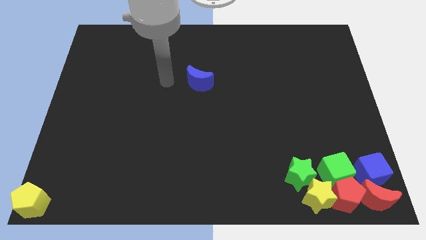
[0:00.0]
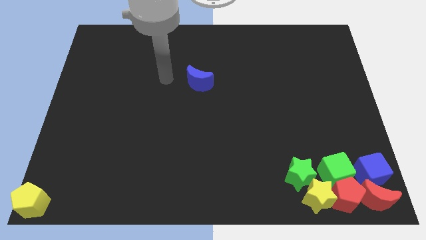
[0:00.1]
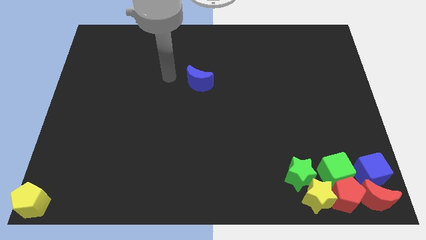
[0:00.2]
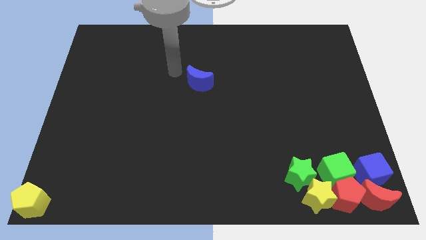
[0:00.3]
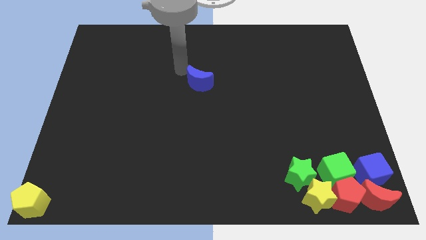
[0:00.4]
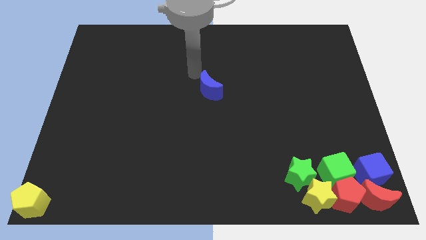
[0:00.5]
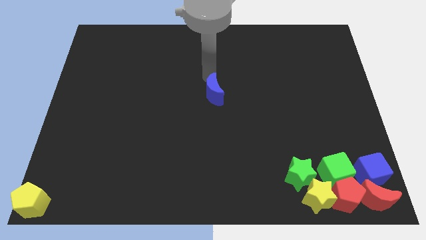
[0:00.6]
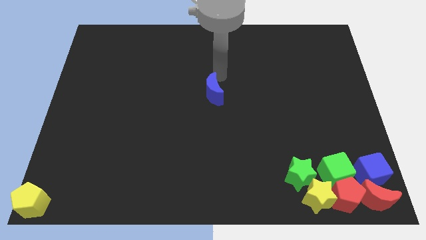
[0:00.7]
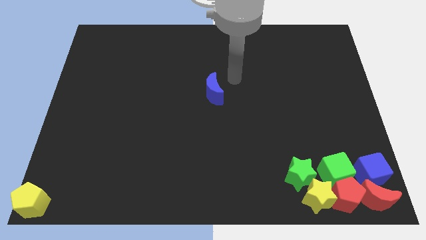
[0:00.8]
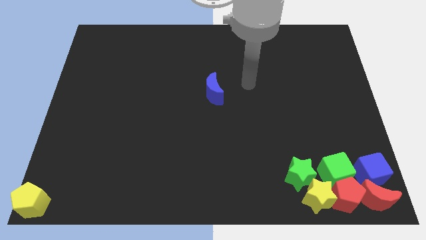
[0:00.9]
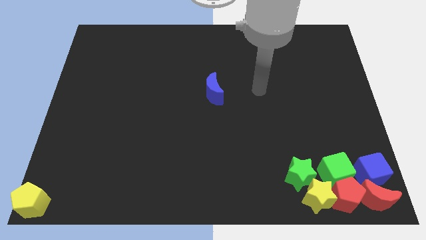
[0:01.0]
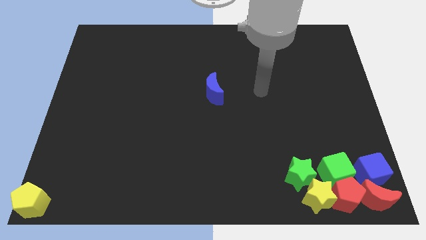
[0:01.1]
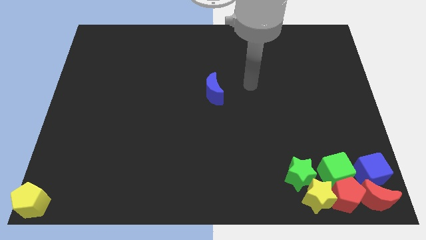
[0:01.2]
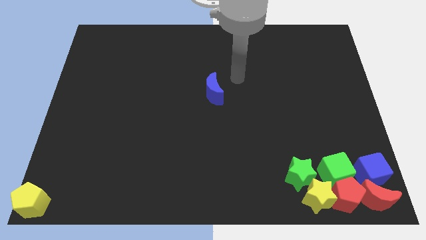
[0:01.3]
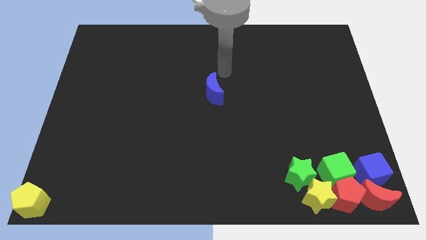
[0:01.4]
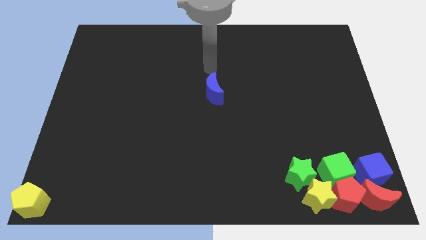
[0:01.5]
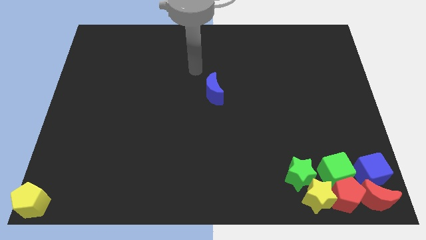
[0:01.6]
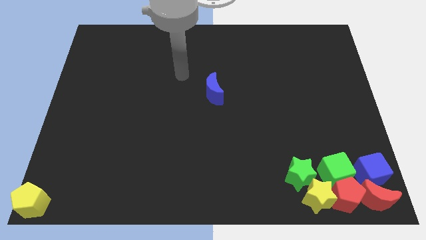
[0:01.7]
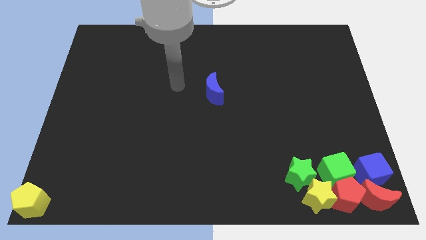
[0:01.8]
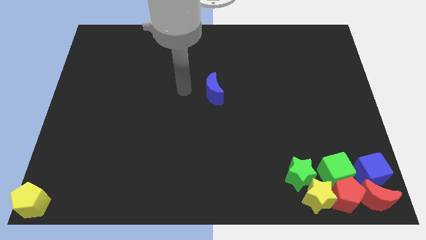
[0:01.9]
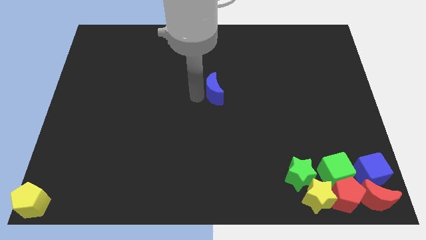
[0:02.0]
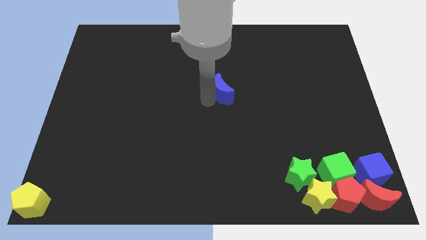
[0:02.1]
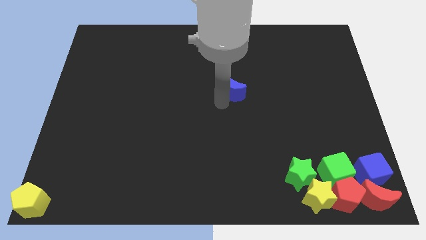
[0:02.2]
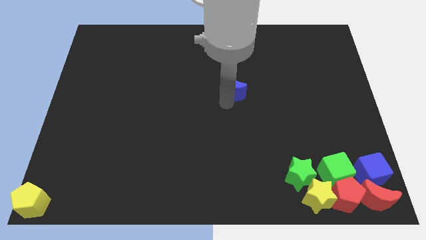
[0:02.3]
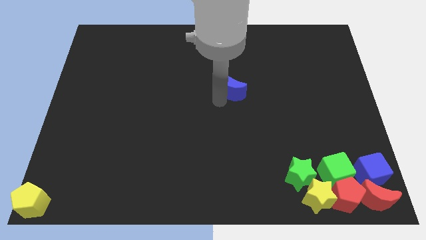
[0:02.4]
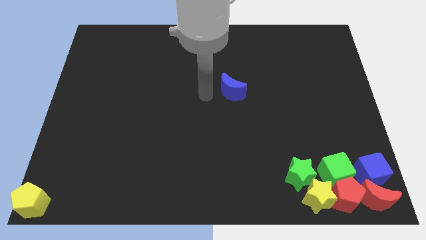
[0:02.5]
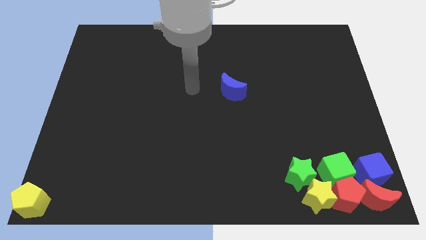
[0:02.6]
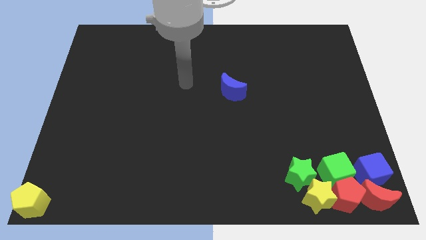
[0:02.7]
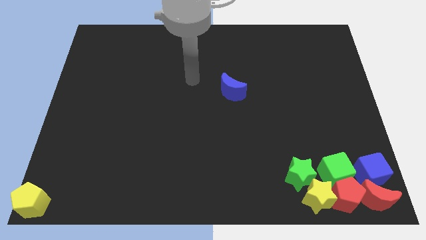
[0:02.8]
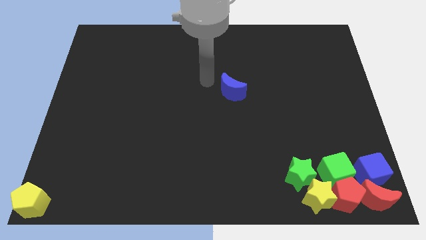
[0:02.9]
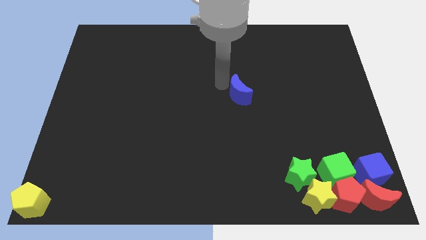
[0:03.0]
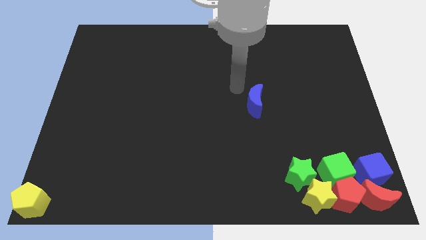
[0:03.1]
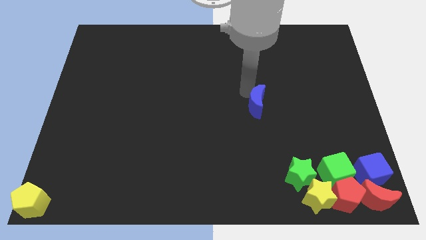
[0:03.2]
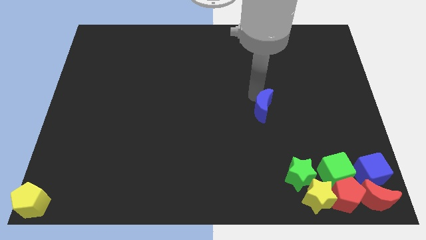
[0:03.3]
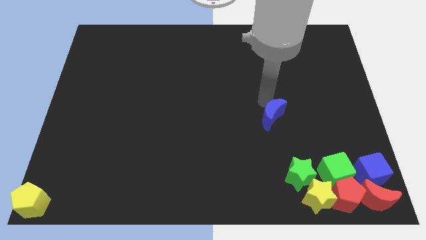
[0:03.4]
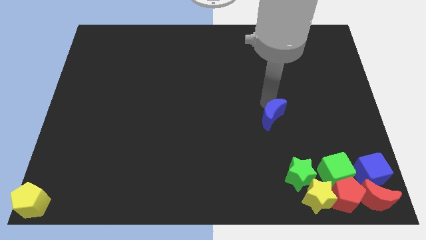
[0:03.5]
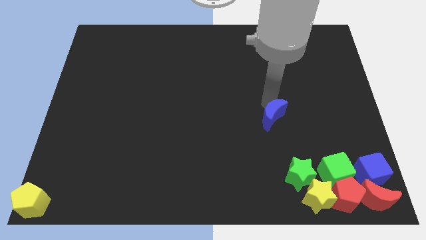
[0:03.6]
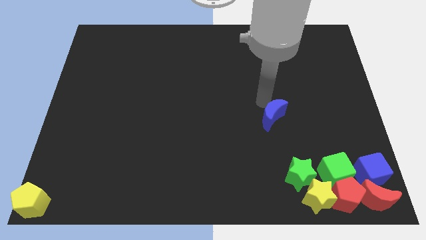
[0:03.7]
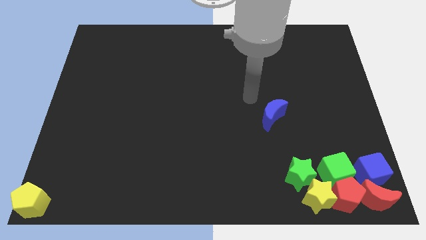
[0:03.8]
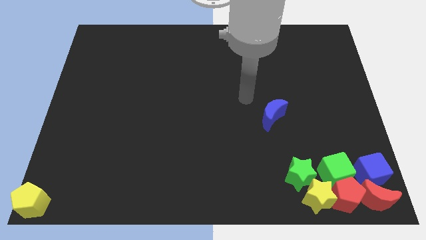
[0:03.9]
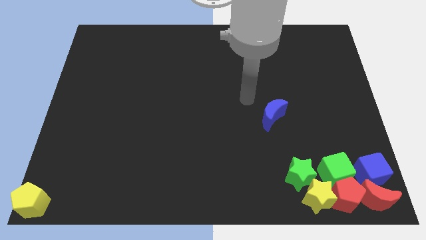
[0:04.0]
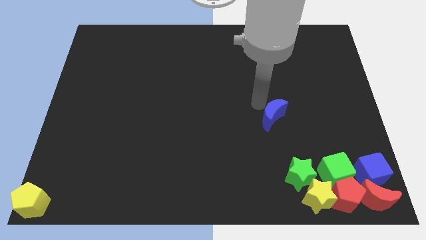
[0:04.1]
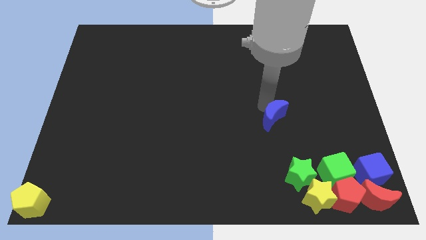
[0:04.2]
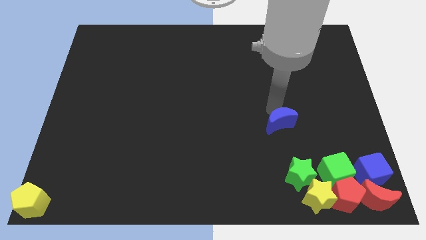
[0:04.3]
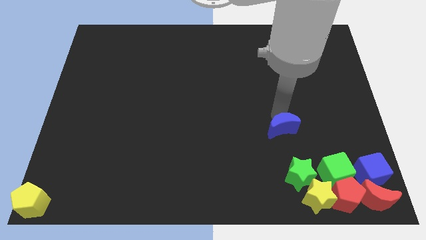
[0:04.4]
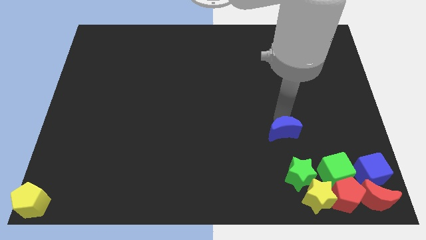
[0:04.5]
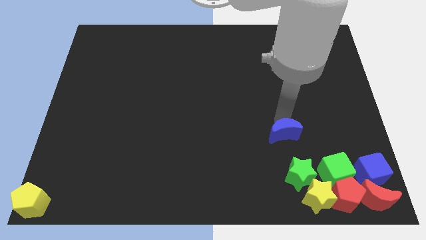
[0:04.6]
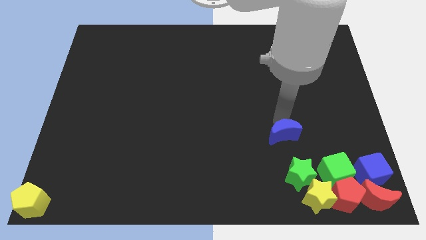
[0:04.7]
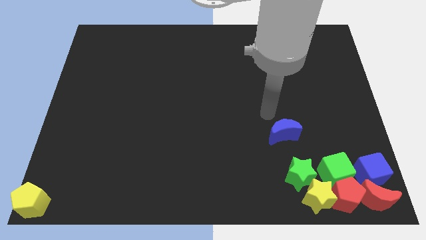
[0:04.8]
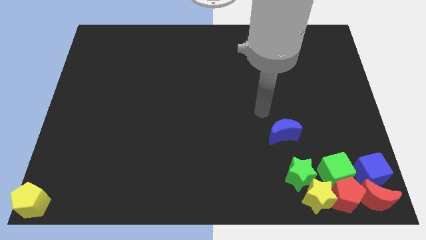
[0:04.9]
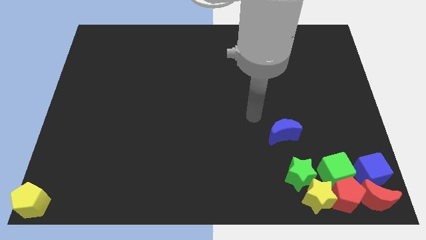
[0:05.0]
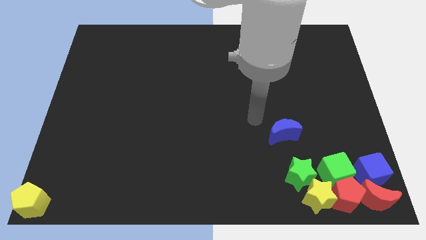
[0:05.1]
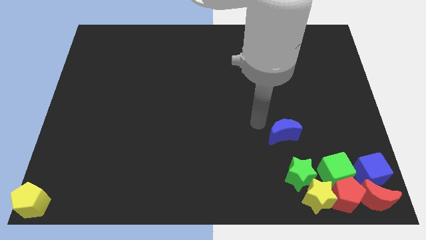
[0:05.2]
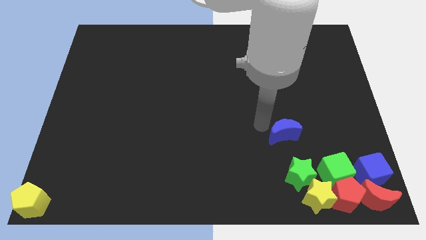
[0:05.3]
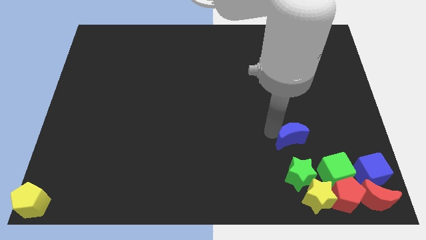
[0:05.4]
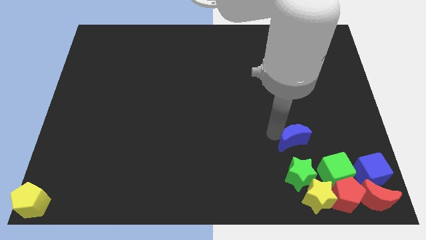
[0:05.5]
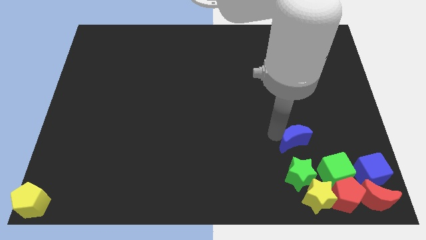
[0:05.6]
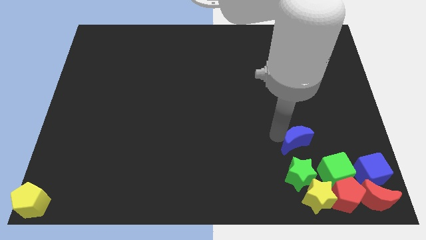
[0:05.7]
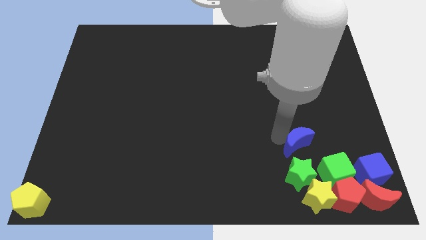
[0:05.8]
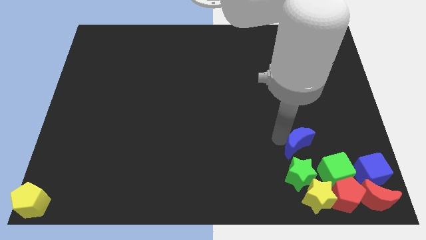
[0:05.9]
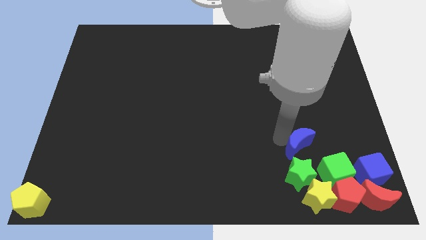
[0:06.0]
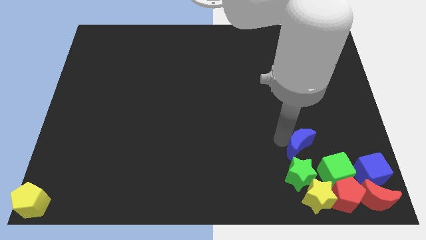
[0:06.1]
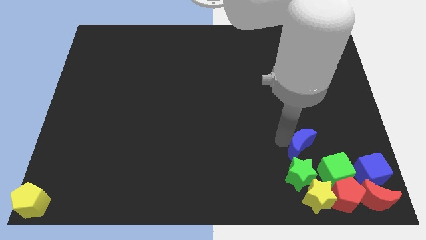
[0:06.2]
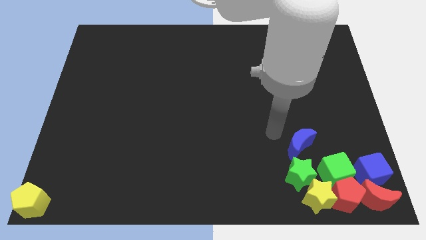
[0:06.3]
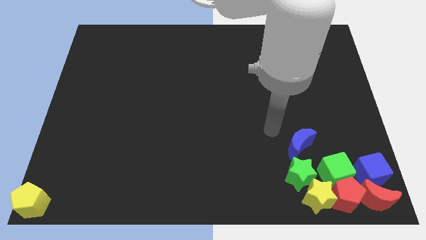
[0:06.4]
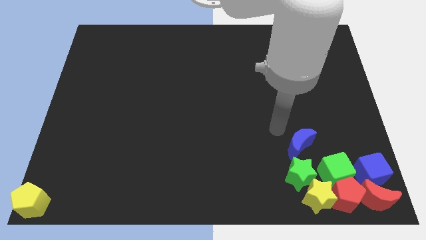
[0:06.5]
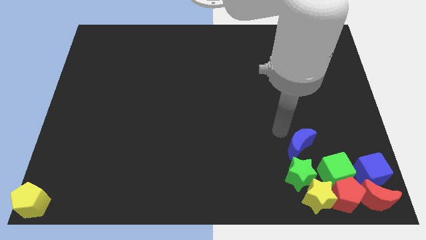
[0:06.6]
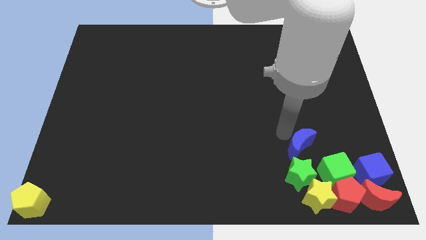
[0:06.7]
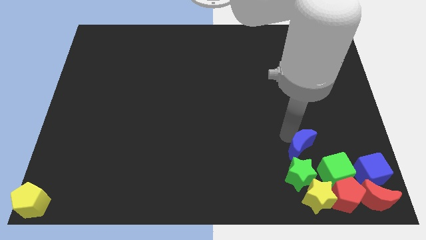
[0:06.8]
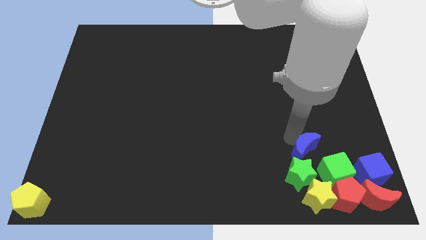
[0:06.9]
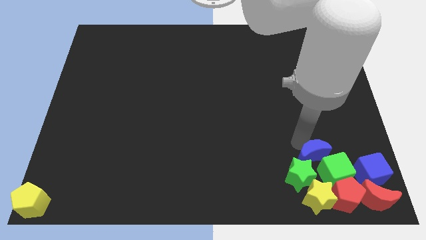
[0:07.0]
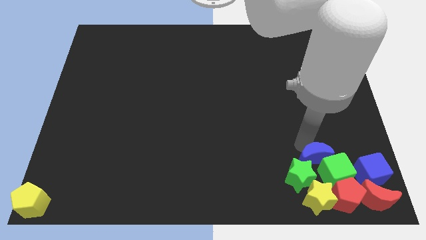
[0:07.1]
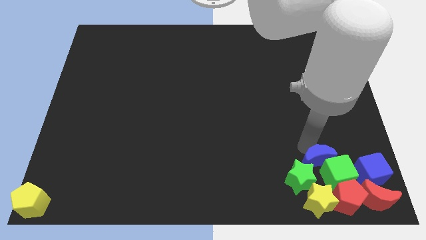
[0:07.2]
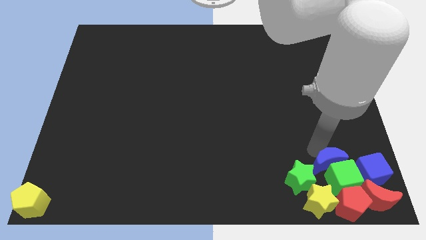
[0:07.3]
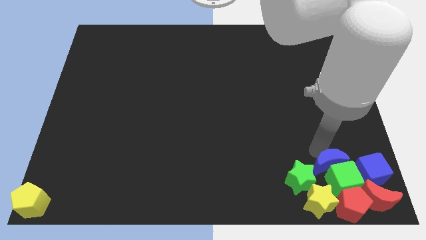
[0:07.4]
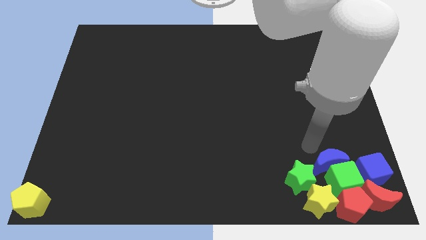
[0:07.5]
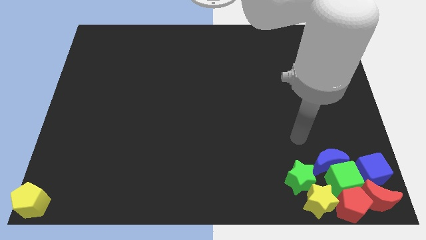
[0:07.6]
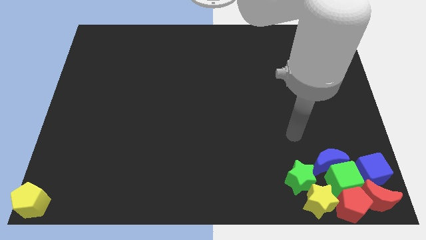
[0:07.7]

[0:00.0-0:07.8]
push blue crescent into group of blocks at bottom right corner of the board

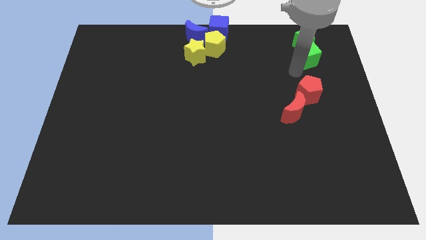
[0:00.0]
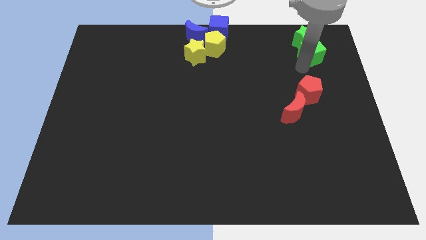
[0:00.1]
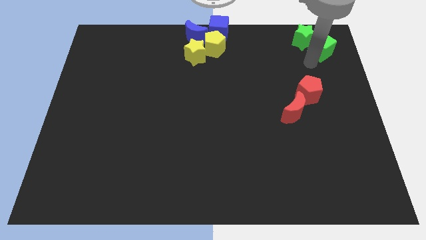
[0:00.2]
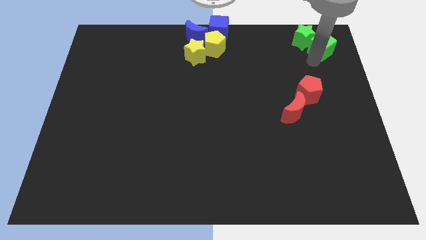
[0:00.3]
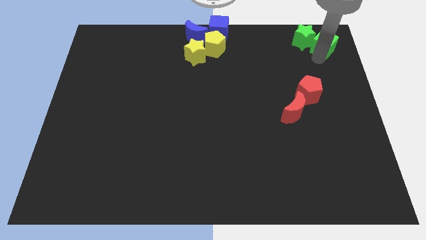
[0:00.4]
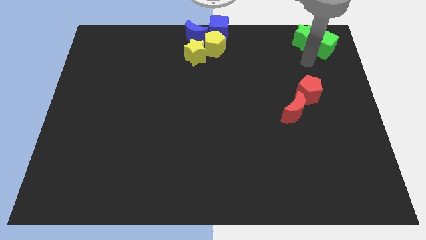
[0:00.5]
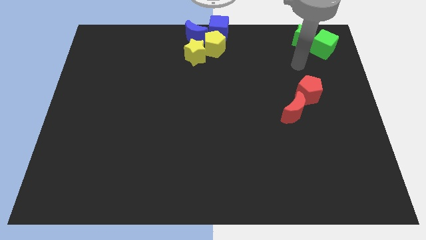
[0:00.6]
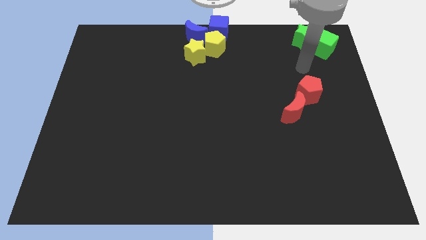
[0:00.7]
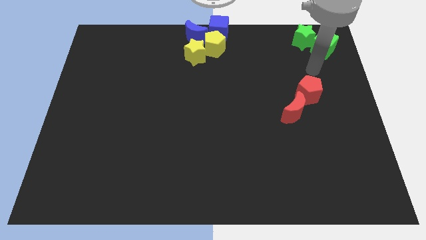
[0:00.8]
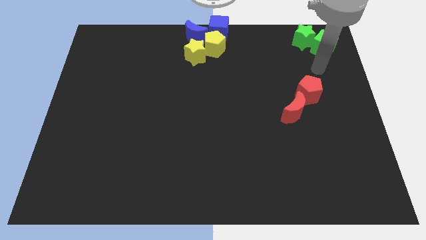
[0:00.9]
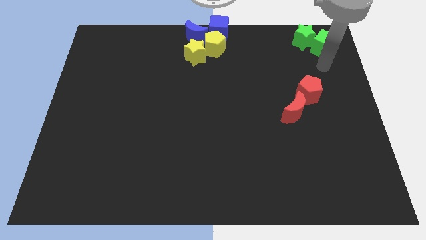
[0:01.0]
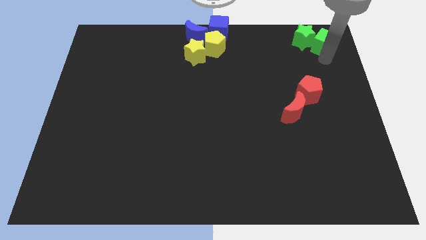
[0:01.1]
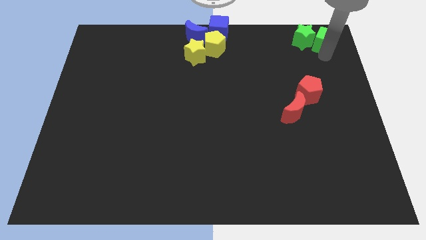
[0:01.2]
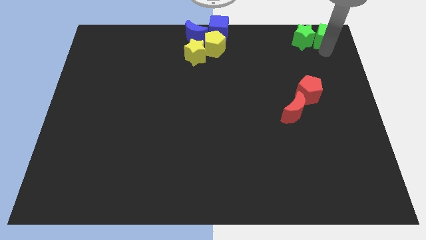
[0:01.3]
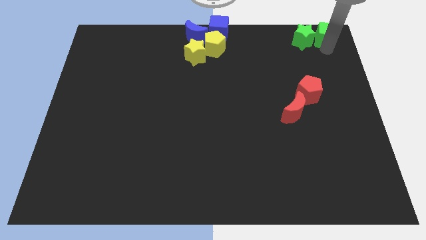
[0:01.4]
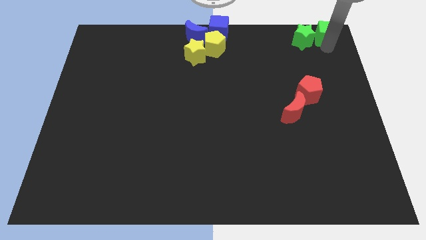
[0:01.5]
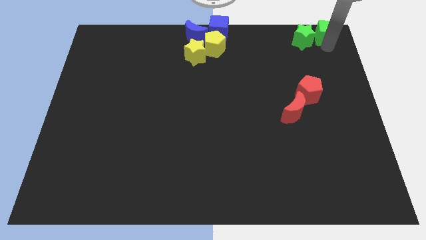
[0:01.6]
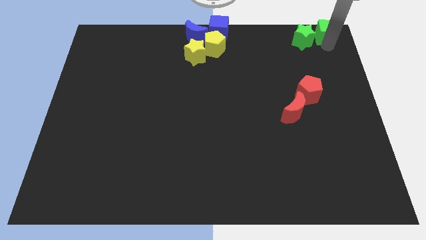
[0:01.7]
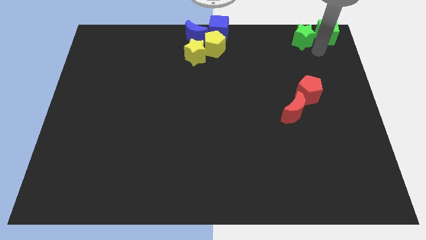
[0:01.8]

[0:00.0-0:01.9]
push green cube beside green star
